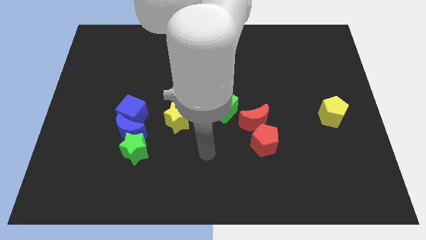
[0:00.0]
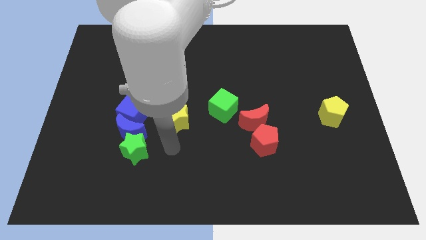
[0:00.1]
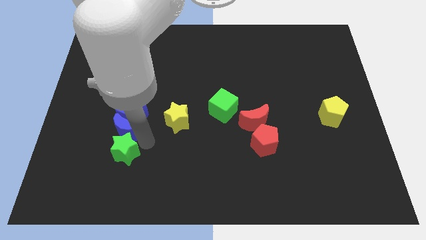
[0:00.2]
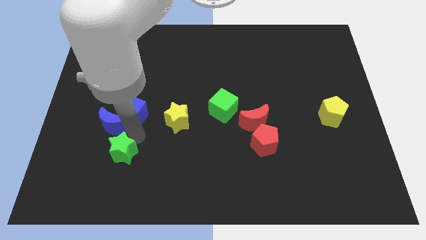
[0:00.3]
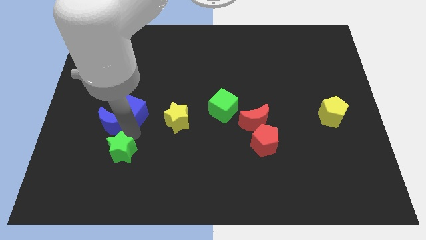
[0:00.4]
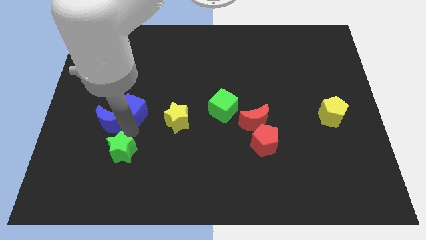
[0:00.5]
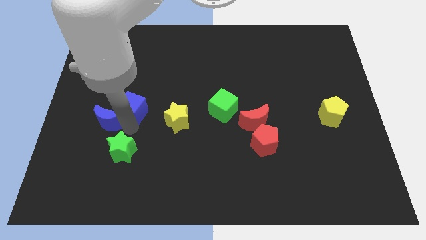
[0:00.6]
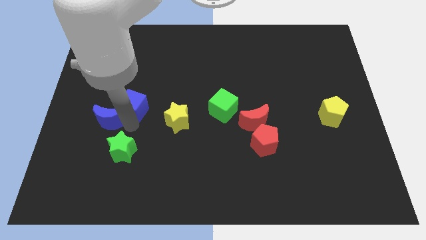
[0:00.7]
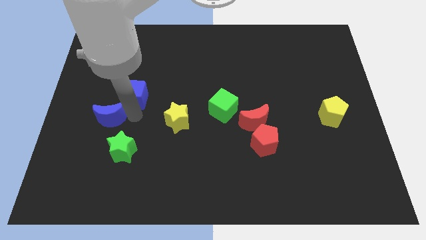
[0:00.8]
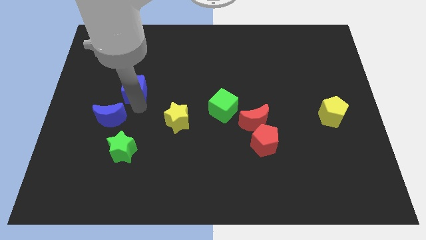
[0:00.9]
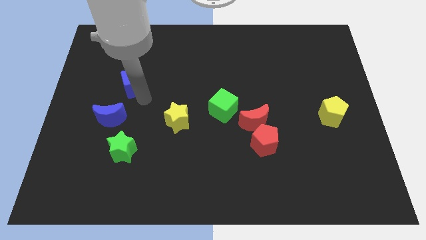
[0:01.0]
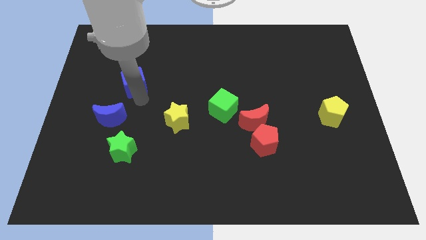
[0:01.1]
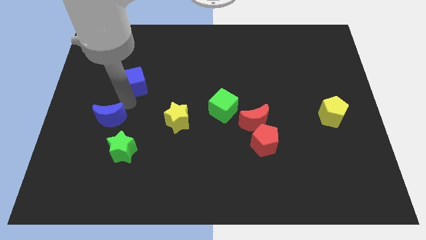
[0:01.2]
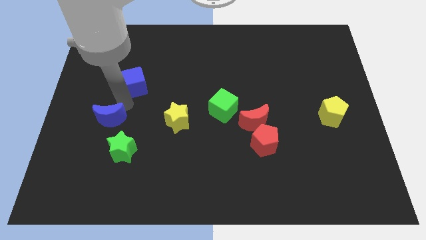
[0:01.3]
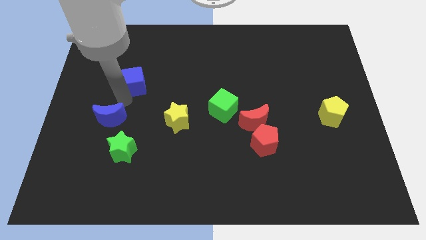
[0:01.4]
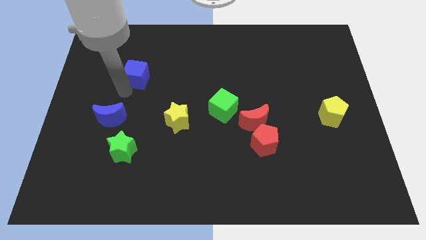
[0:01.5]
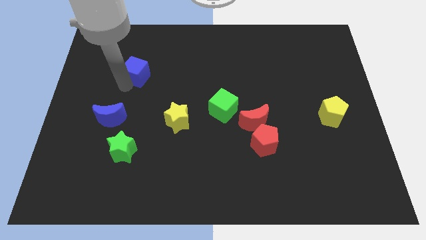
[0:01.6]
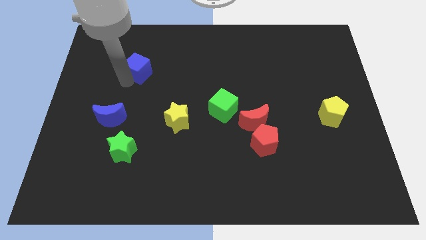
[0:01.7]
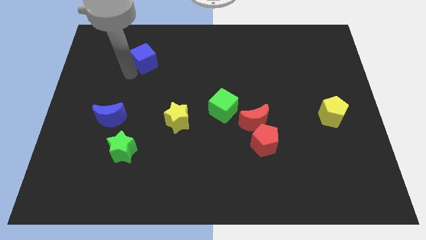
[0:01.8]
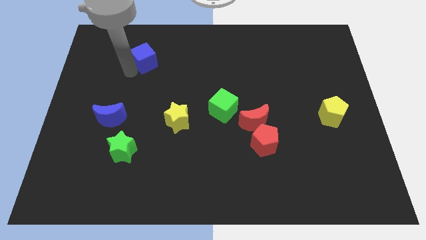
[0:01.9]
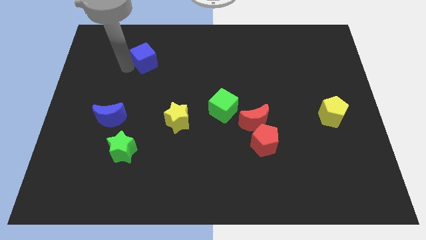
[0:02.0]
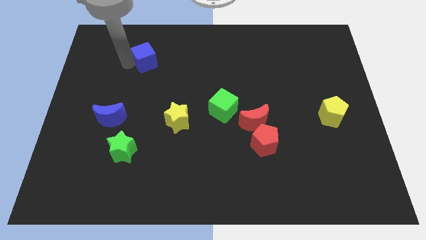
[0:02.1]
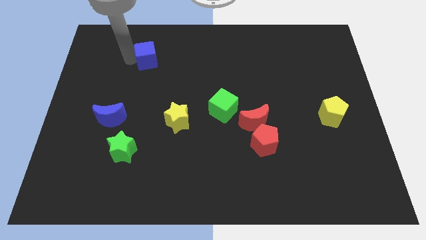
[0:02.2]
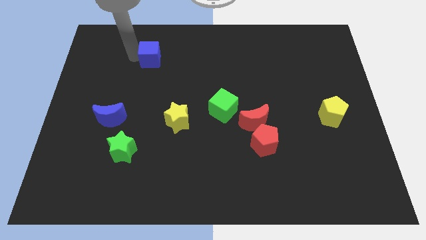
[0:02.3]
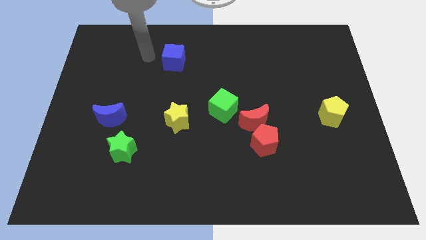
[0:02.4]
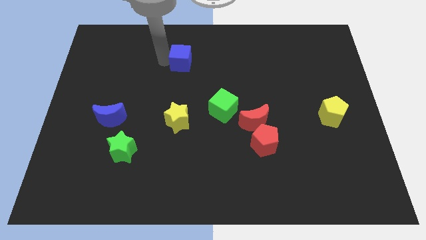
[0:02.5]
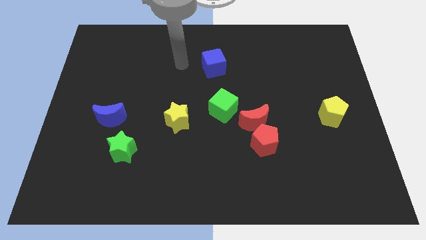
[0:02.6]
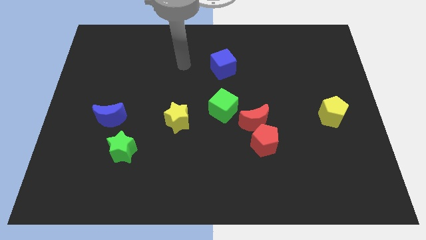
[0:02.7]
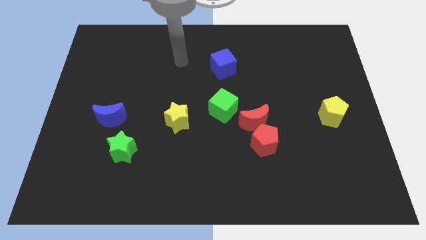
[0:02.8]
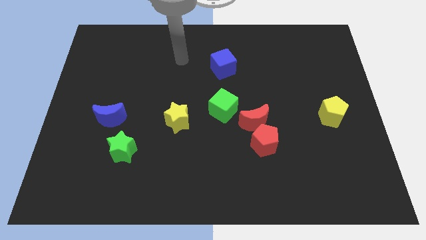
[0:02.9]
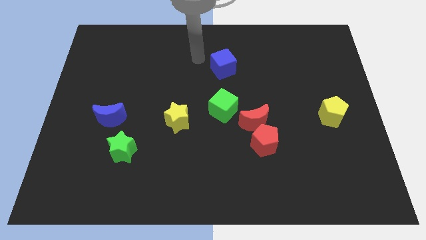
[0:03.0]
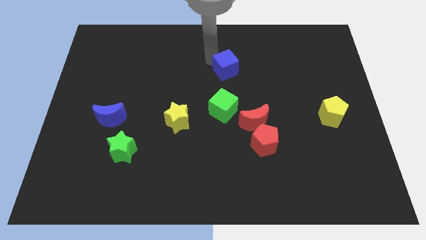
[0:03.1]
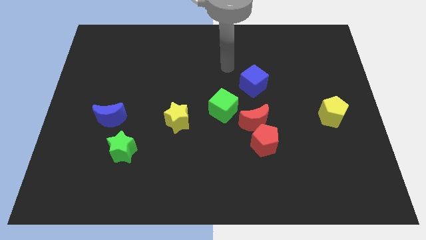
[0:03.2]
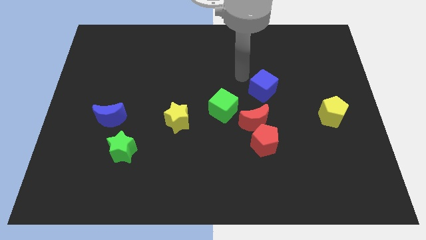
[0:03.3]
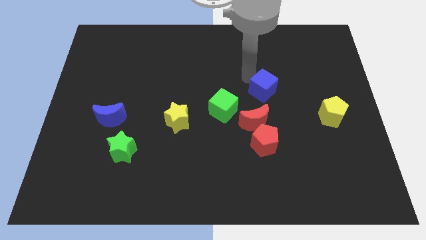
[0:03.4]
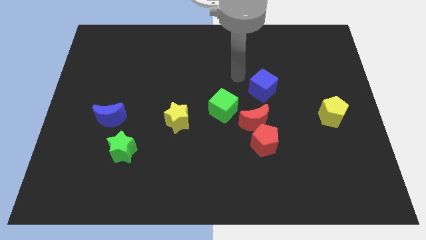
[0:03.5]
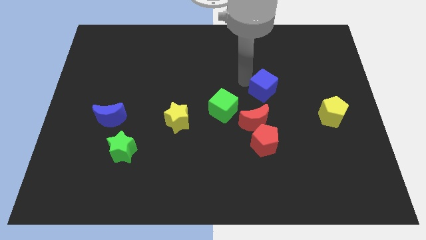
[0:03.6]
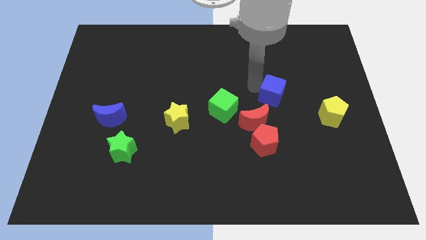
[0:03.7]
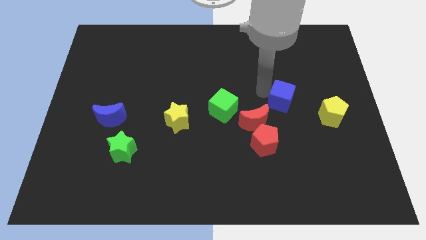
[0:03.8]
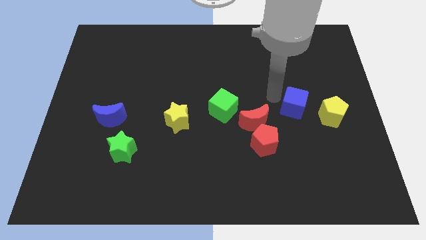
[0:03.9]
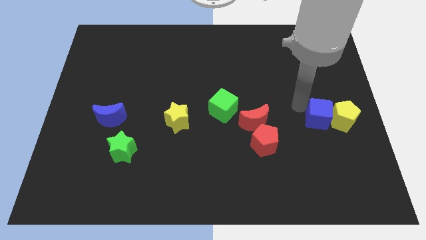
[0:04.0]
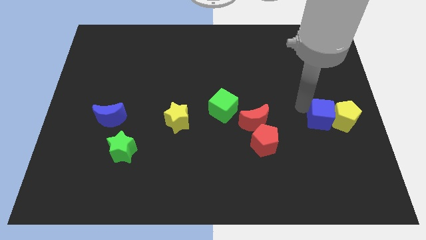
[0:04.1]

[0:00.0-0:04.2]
move the blue cube to the yellow pentagon

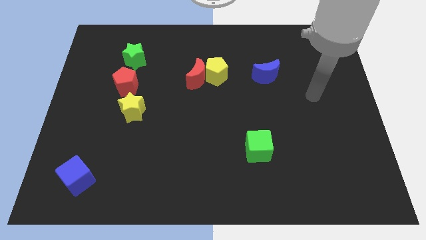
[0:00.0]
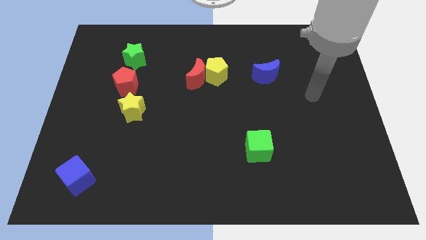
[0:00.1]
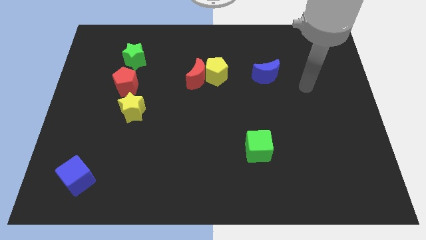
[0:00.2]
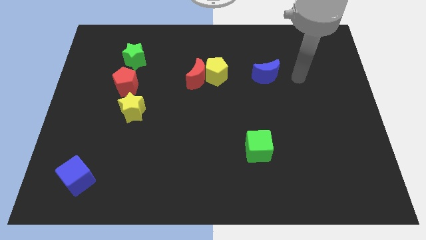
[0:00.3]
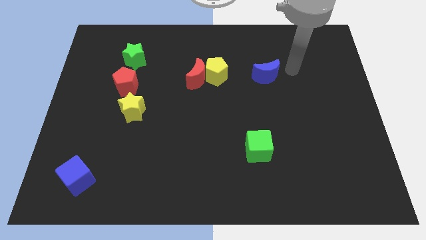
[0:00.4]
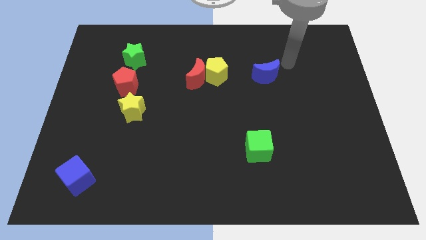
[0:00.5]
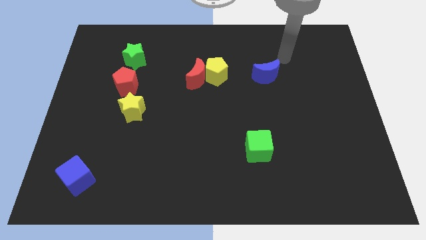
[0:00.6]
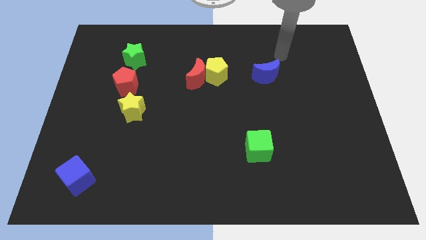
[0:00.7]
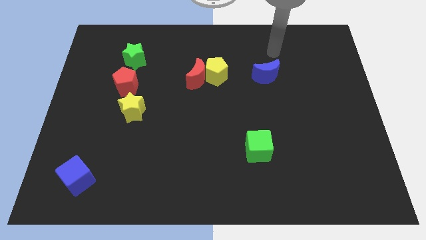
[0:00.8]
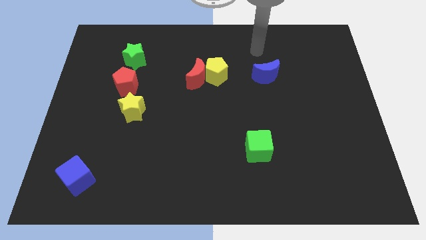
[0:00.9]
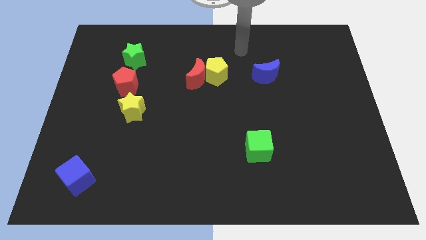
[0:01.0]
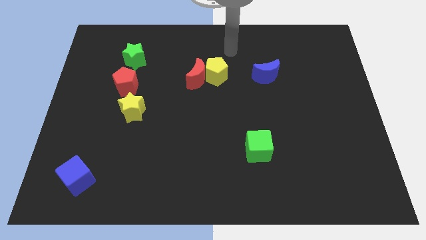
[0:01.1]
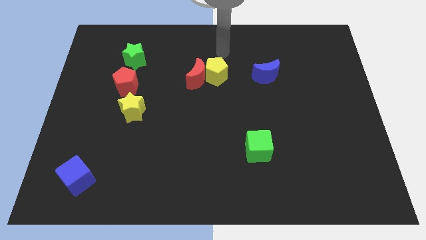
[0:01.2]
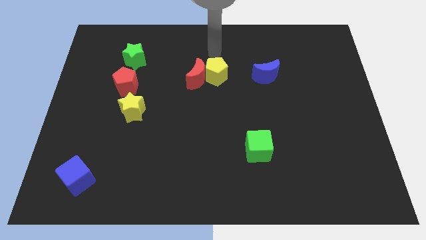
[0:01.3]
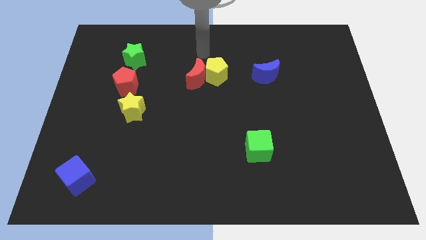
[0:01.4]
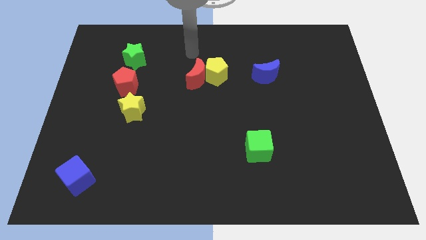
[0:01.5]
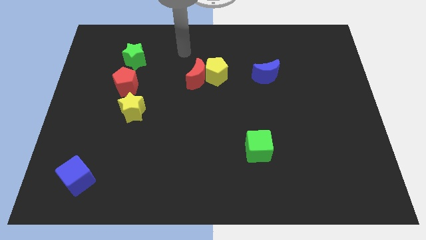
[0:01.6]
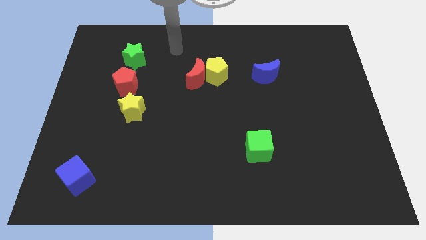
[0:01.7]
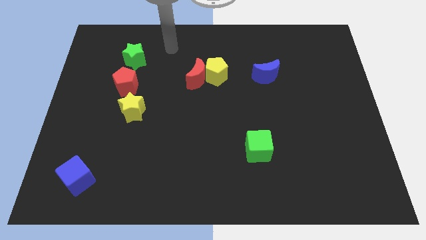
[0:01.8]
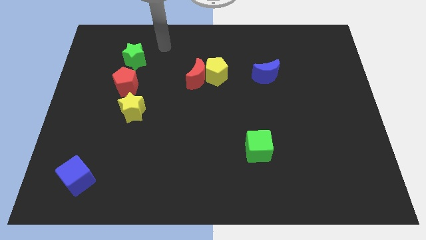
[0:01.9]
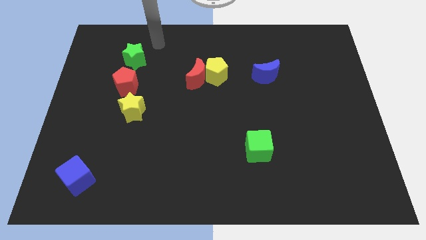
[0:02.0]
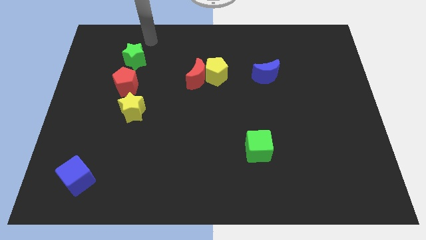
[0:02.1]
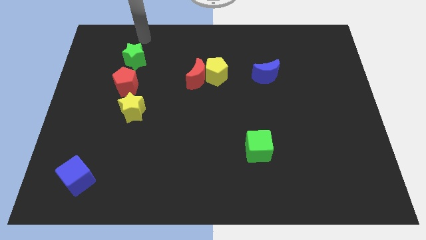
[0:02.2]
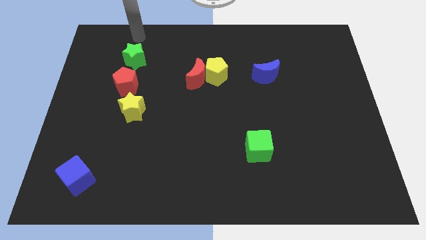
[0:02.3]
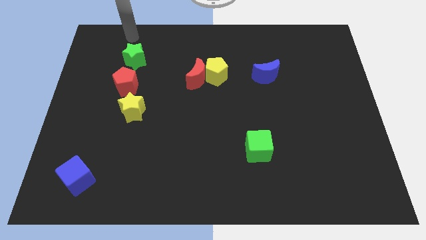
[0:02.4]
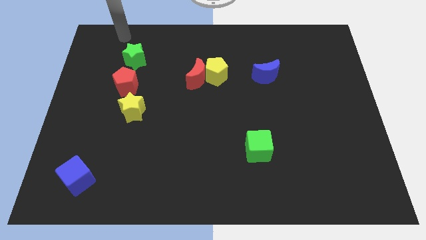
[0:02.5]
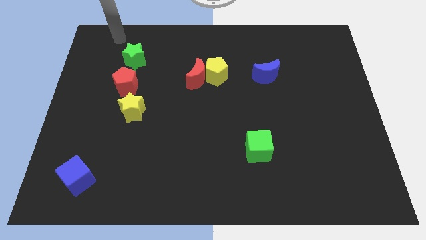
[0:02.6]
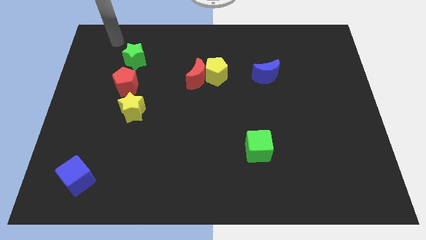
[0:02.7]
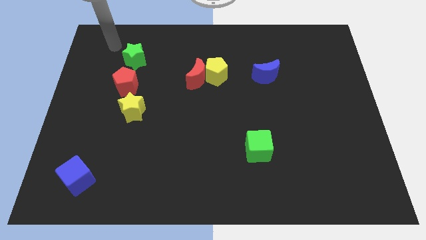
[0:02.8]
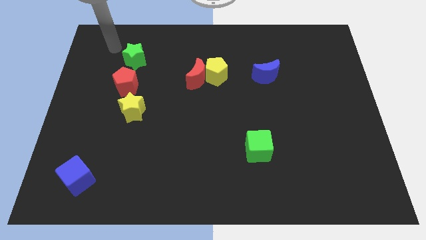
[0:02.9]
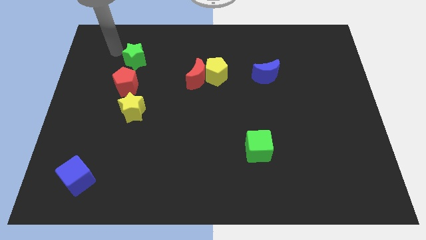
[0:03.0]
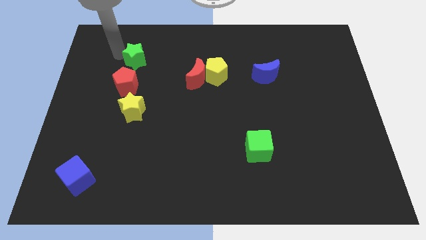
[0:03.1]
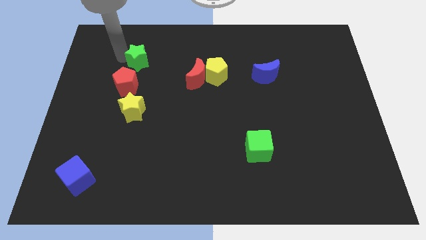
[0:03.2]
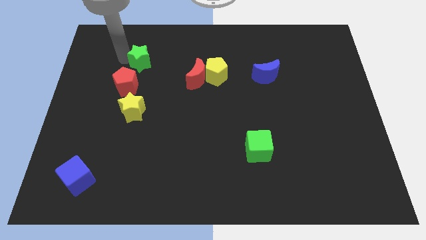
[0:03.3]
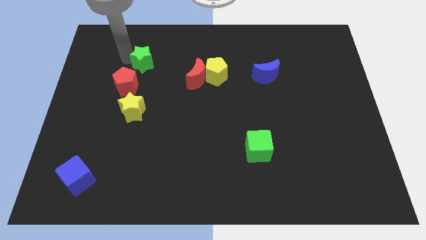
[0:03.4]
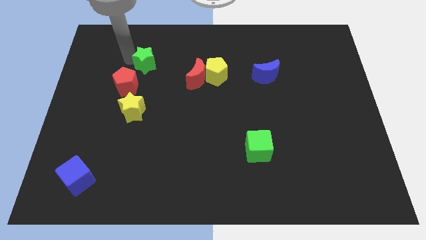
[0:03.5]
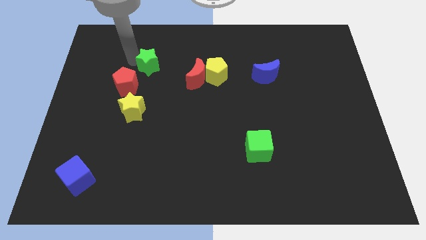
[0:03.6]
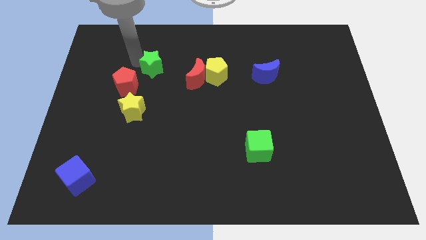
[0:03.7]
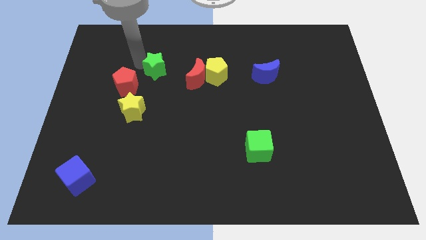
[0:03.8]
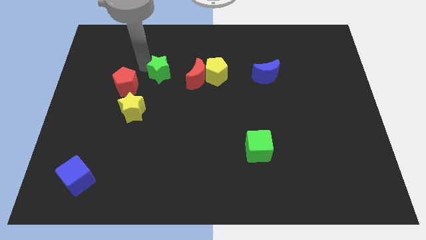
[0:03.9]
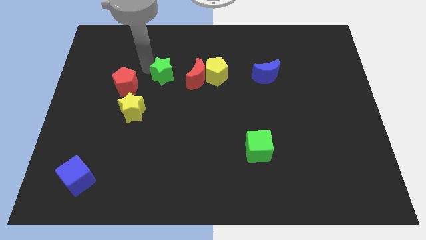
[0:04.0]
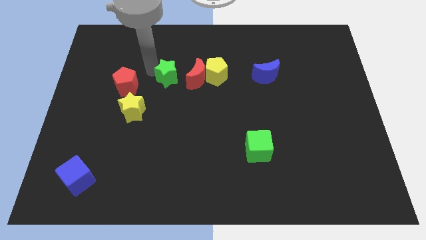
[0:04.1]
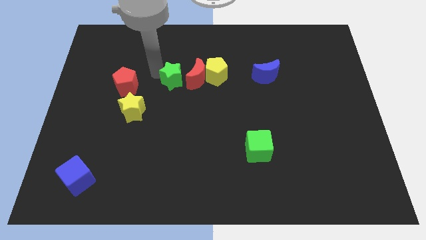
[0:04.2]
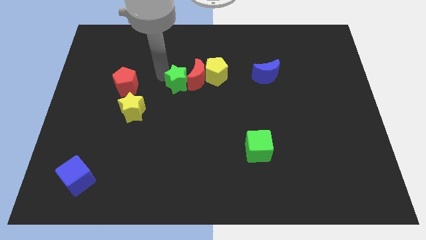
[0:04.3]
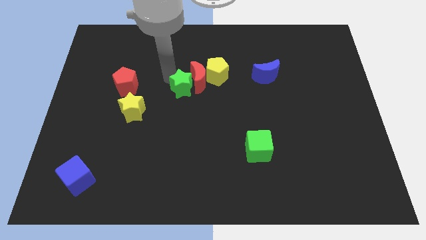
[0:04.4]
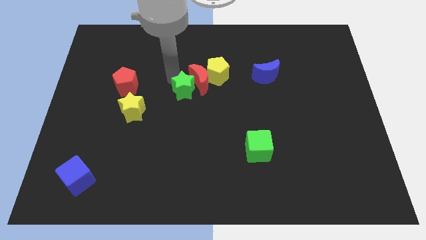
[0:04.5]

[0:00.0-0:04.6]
slide the green star close to the red moon
